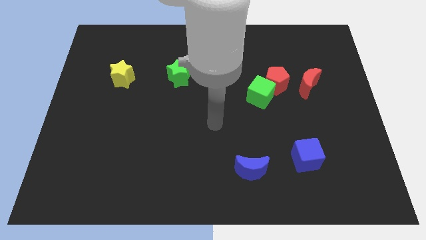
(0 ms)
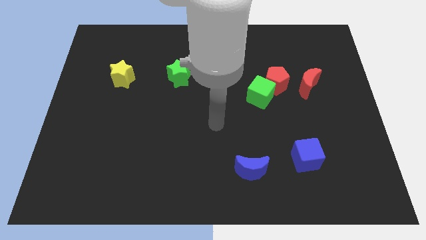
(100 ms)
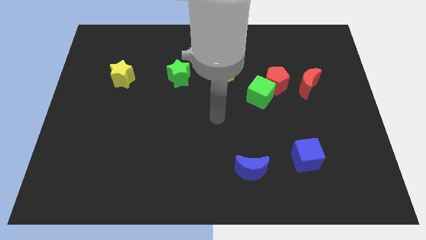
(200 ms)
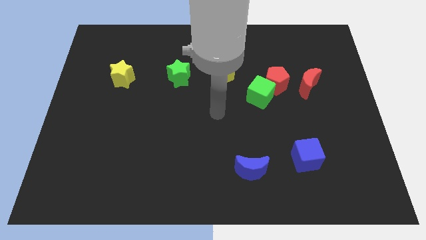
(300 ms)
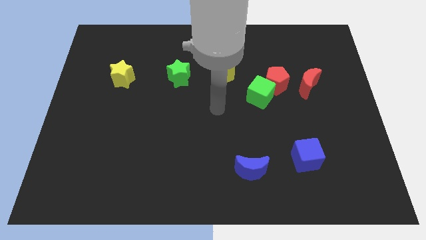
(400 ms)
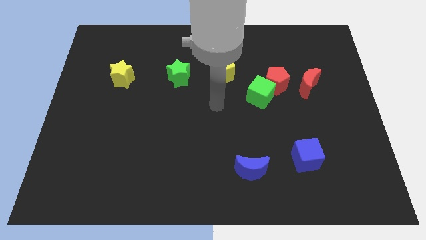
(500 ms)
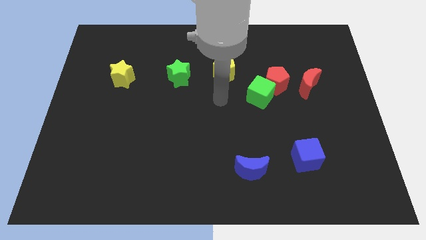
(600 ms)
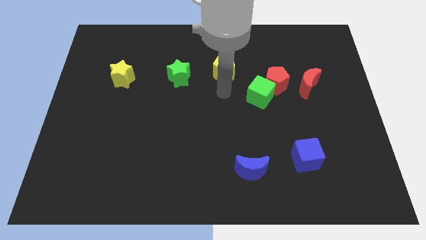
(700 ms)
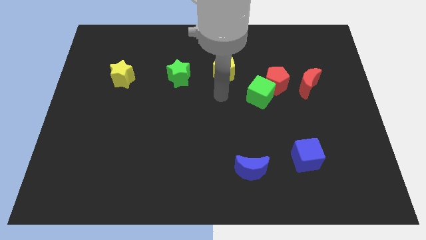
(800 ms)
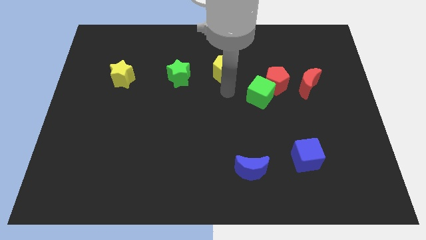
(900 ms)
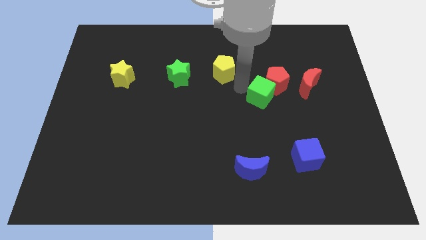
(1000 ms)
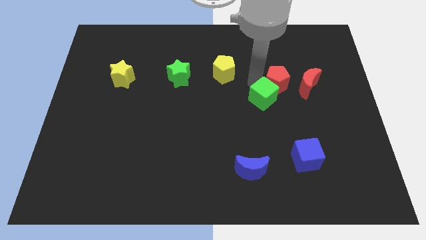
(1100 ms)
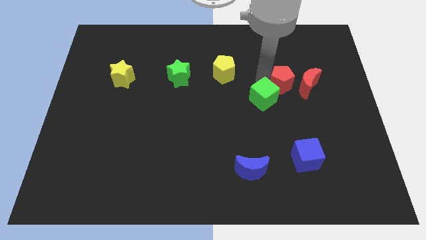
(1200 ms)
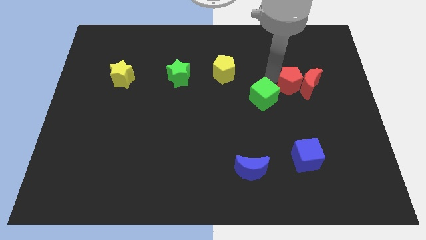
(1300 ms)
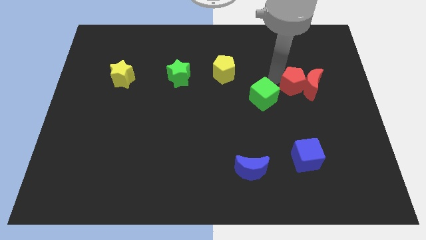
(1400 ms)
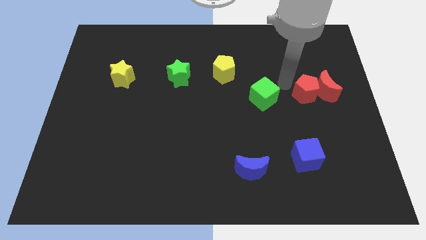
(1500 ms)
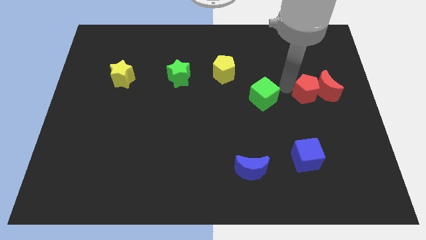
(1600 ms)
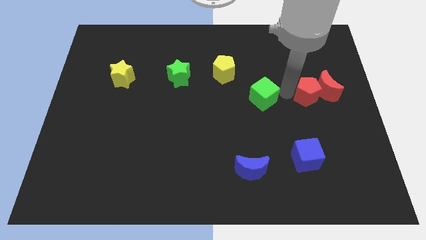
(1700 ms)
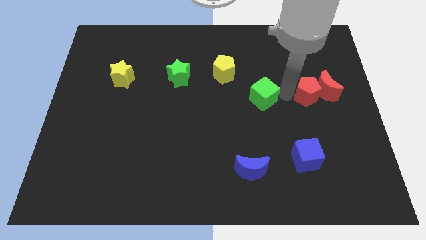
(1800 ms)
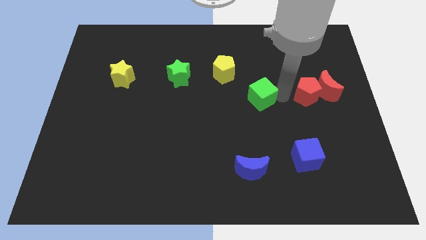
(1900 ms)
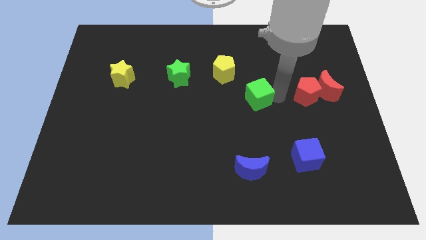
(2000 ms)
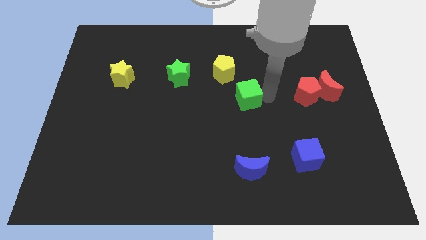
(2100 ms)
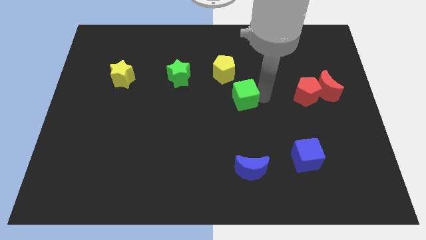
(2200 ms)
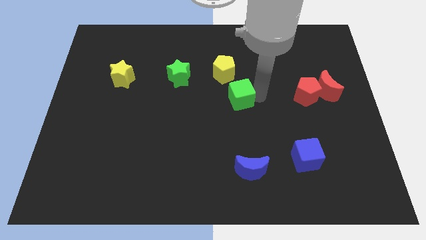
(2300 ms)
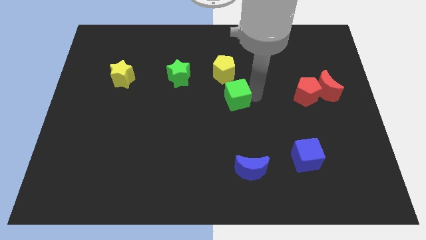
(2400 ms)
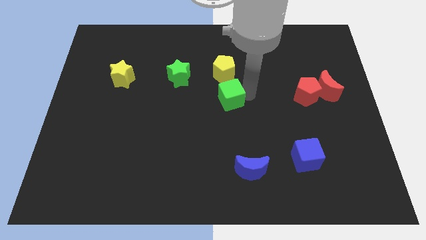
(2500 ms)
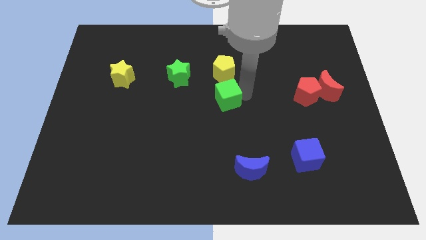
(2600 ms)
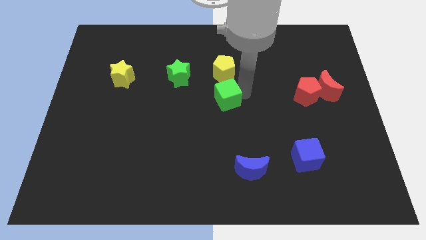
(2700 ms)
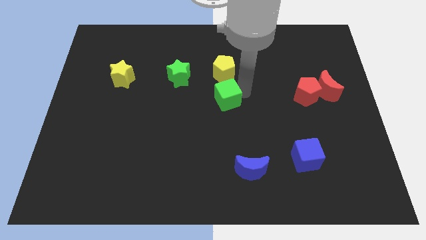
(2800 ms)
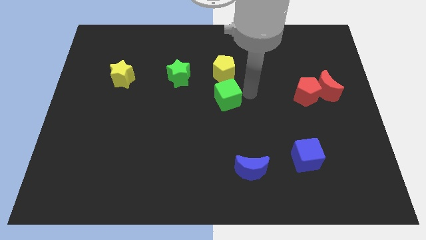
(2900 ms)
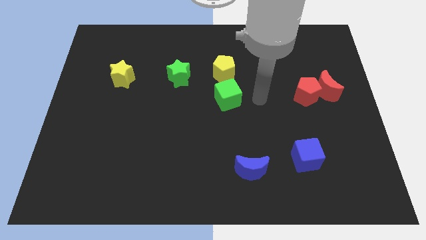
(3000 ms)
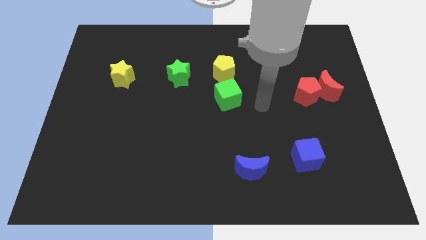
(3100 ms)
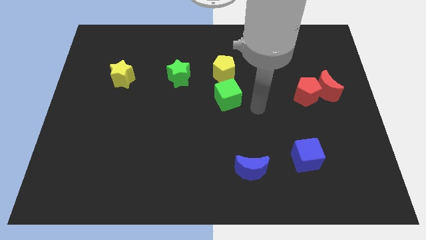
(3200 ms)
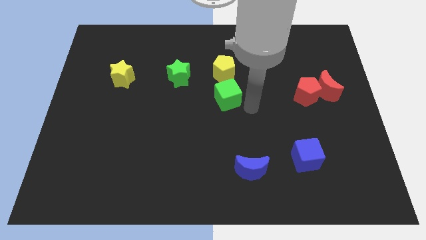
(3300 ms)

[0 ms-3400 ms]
place the green cube at the bottom of the yellow pentagon

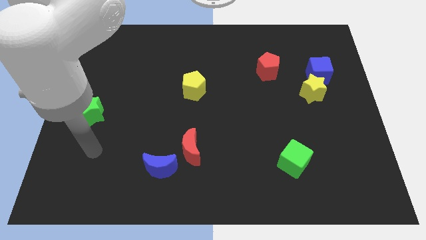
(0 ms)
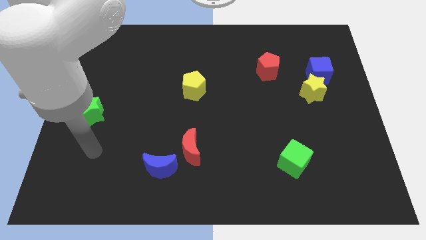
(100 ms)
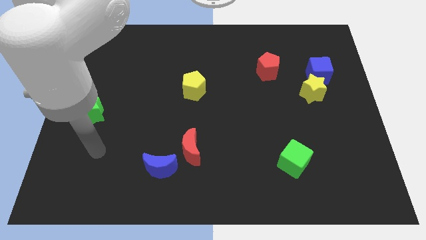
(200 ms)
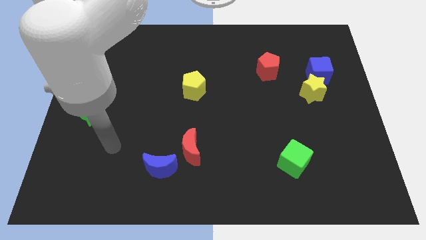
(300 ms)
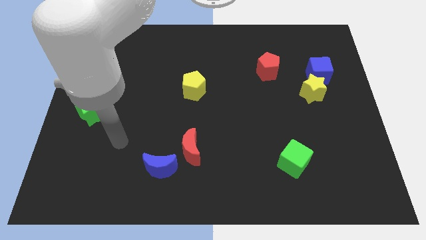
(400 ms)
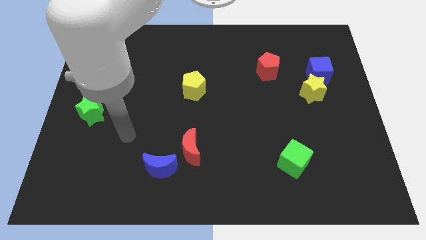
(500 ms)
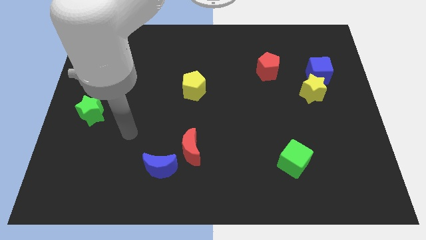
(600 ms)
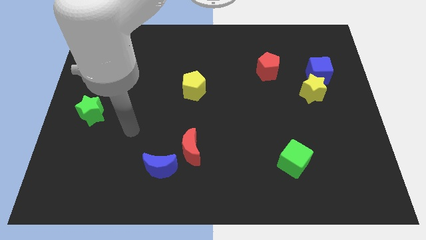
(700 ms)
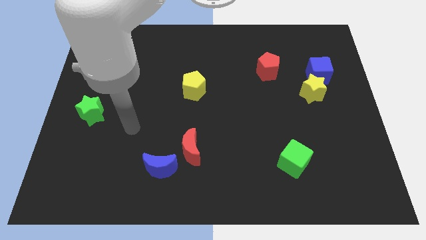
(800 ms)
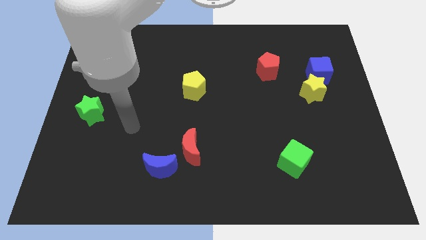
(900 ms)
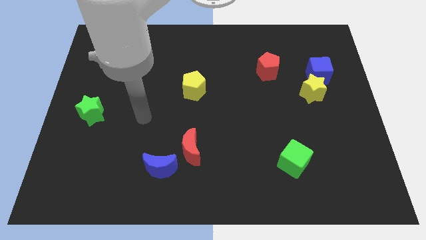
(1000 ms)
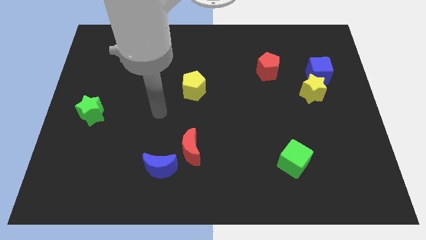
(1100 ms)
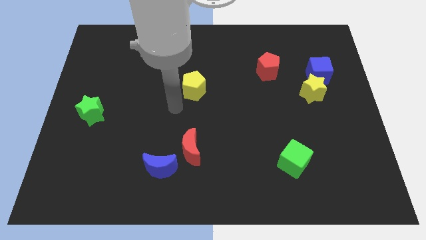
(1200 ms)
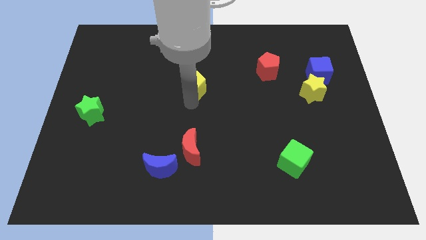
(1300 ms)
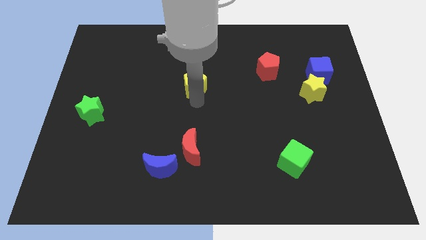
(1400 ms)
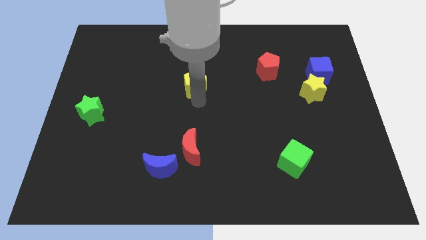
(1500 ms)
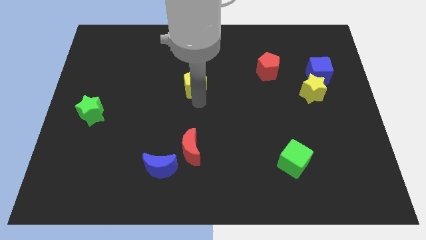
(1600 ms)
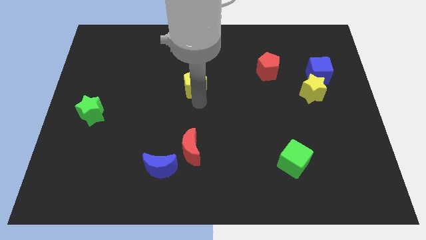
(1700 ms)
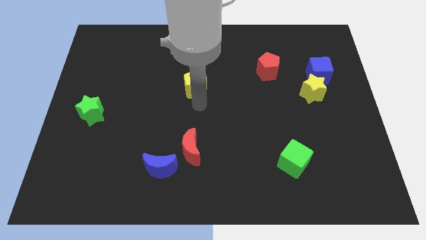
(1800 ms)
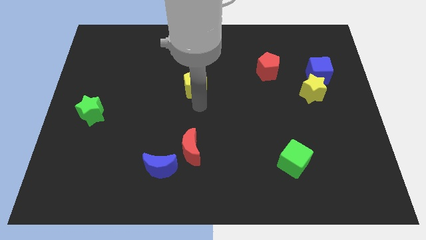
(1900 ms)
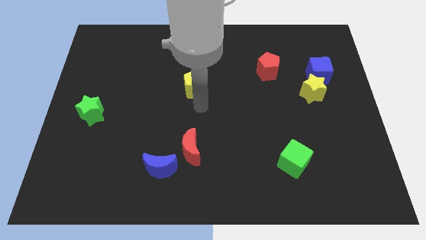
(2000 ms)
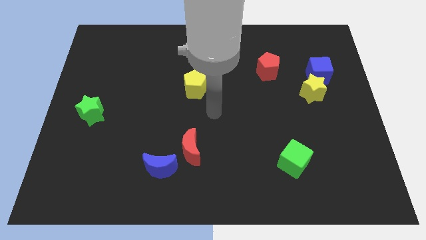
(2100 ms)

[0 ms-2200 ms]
place your arm to the bottom of yellow pentagon

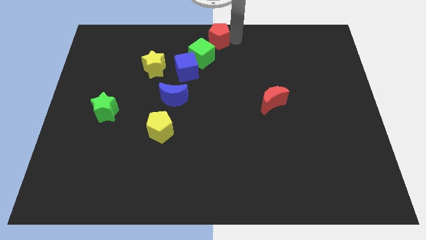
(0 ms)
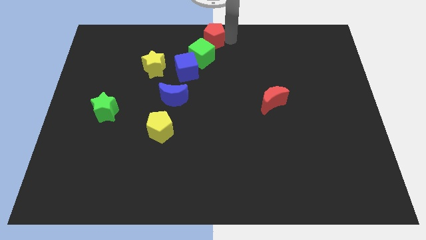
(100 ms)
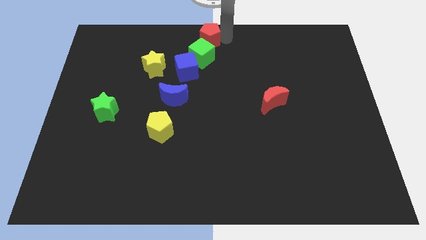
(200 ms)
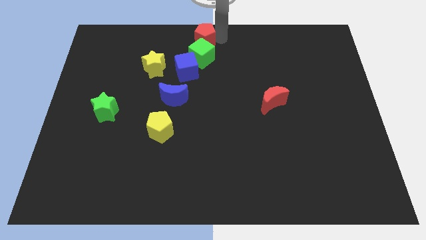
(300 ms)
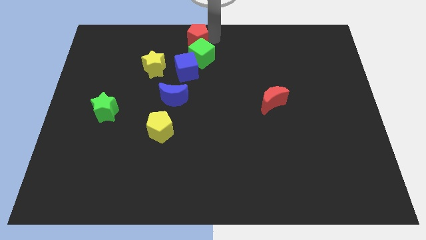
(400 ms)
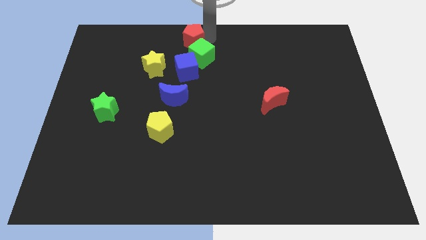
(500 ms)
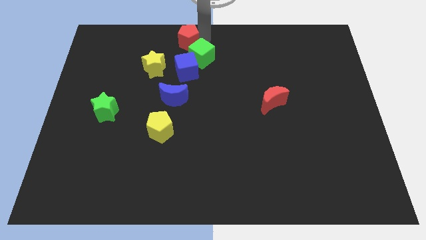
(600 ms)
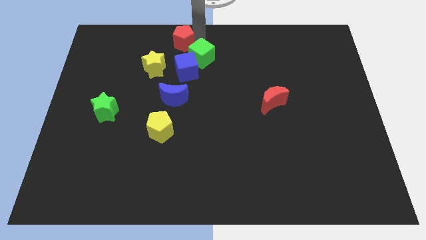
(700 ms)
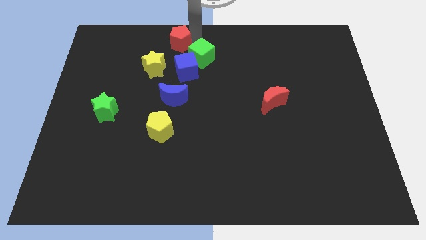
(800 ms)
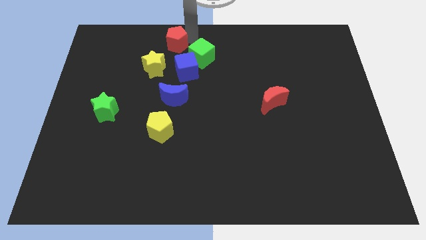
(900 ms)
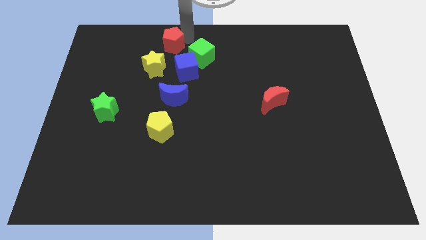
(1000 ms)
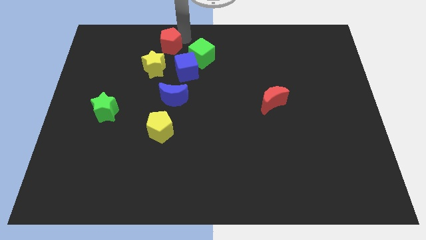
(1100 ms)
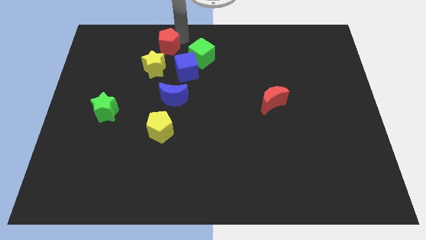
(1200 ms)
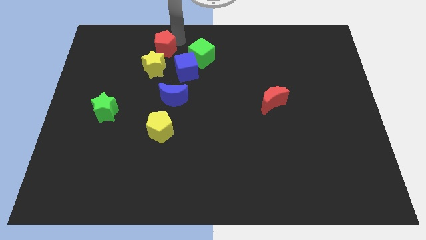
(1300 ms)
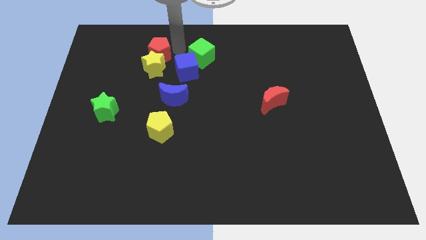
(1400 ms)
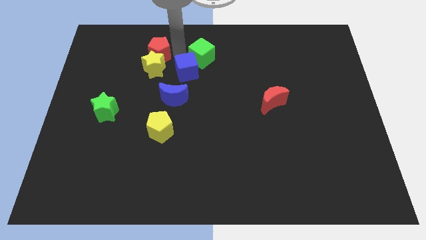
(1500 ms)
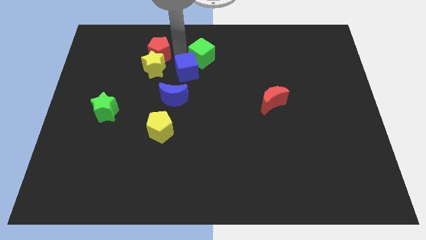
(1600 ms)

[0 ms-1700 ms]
push the red pentagon into yellow star

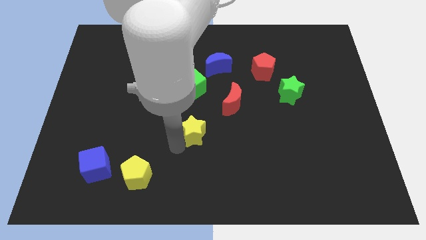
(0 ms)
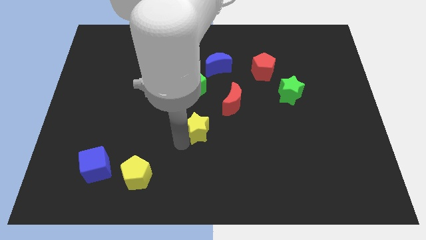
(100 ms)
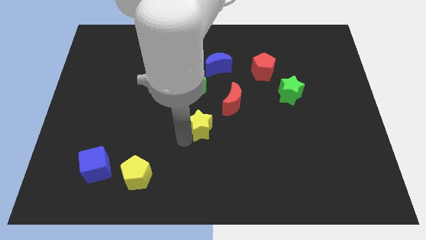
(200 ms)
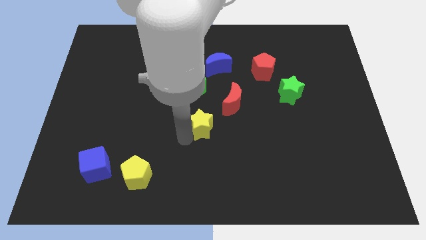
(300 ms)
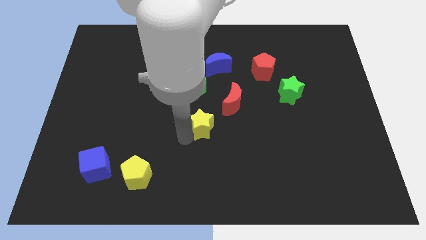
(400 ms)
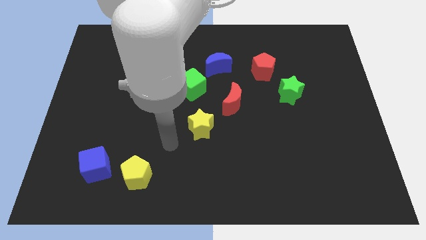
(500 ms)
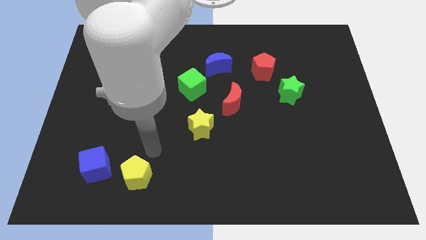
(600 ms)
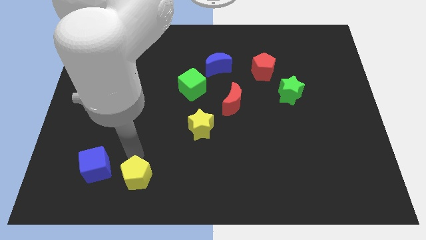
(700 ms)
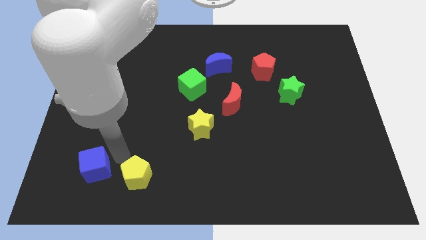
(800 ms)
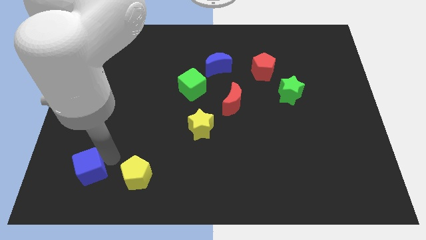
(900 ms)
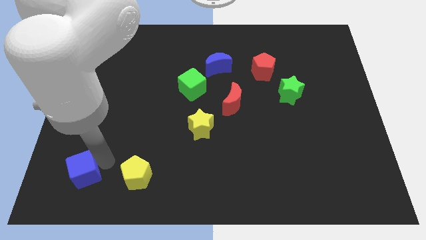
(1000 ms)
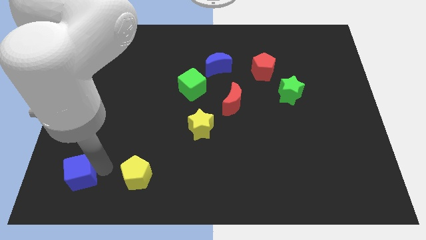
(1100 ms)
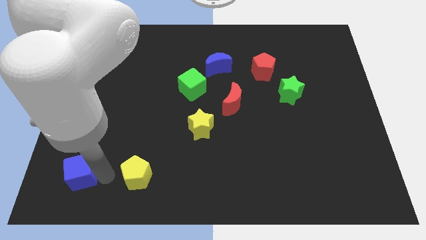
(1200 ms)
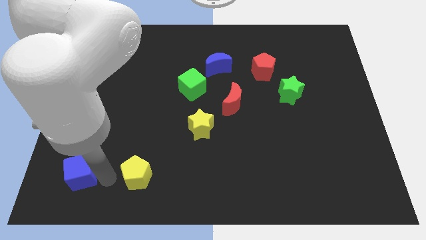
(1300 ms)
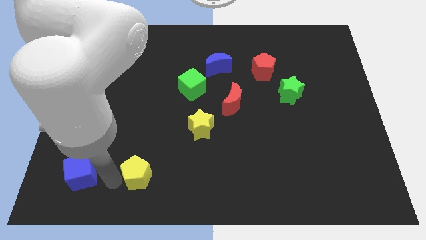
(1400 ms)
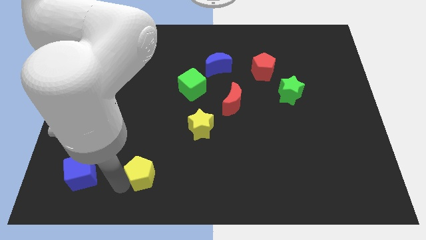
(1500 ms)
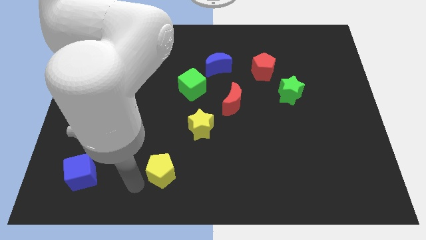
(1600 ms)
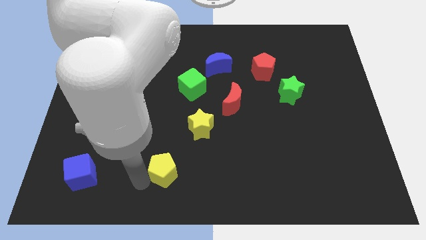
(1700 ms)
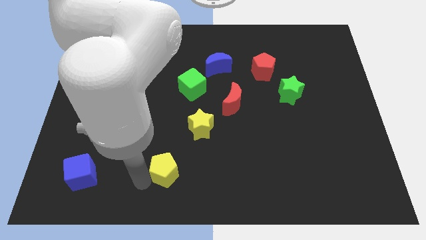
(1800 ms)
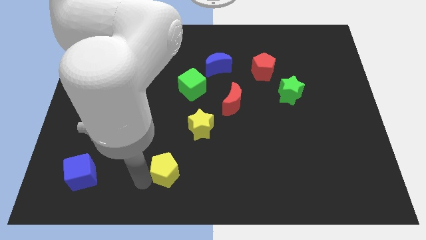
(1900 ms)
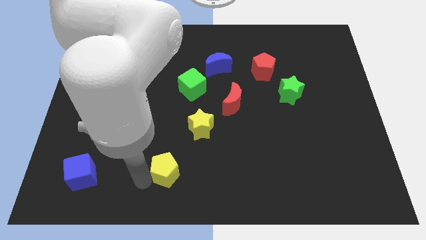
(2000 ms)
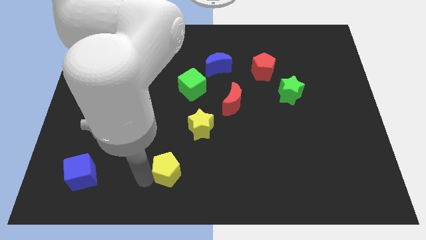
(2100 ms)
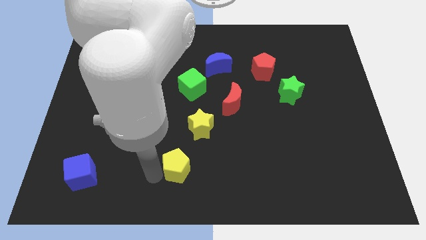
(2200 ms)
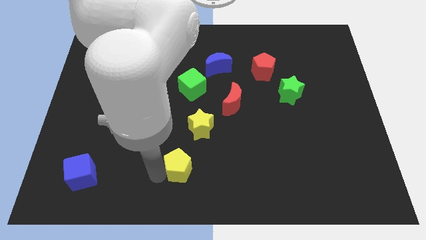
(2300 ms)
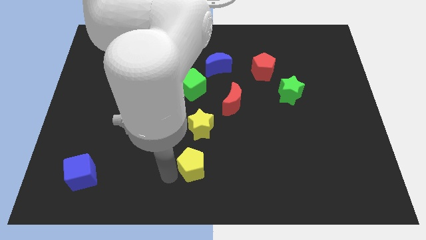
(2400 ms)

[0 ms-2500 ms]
place yellow pentagon to the bottom of yellow star
